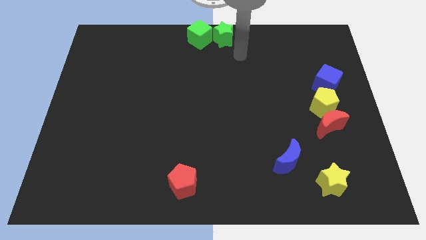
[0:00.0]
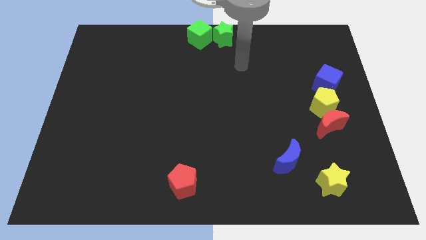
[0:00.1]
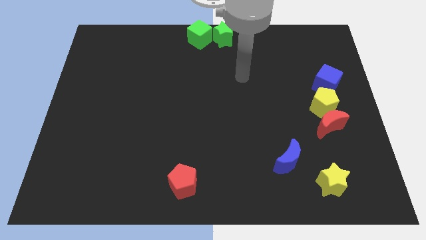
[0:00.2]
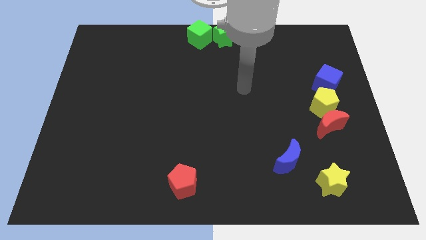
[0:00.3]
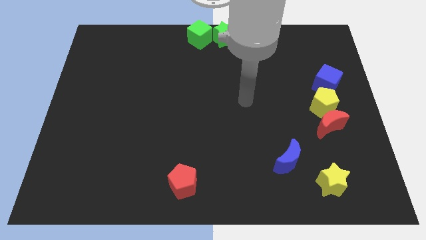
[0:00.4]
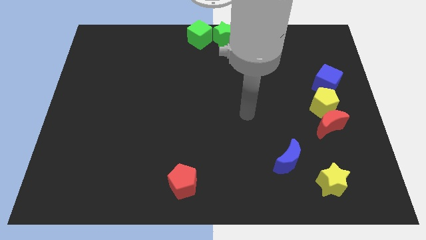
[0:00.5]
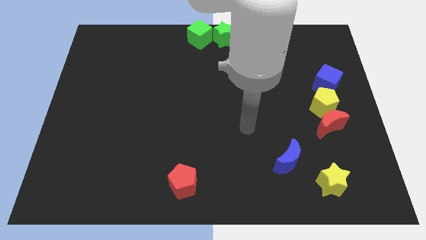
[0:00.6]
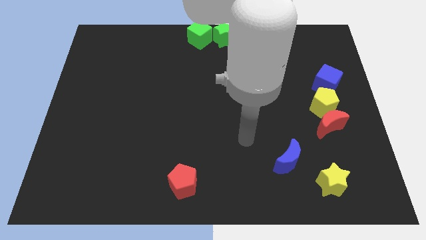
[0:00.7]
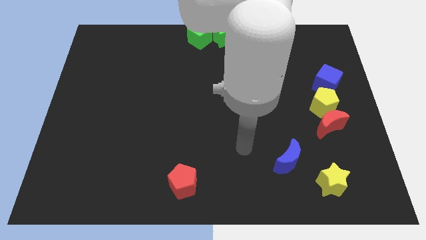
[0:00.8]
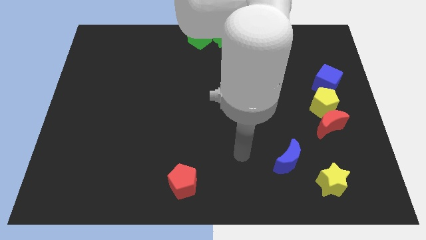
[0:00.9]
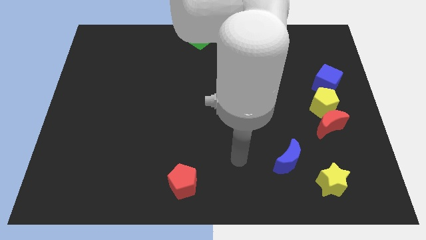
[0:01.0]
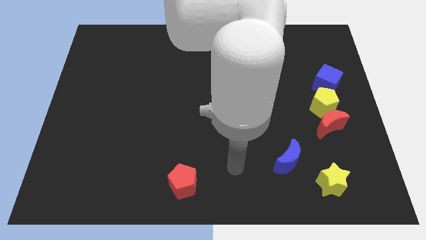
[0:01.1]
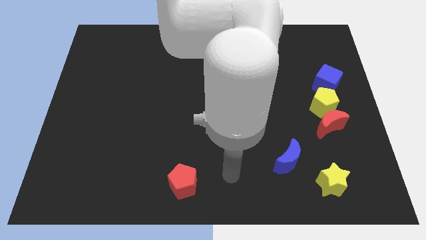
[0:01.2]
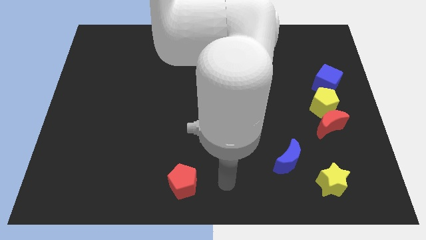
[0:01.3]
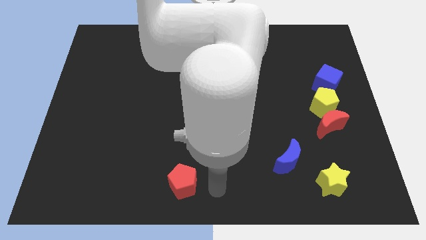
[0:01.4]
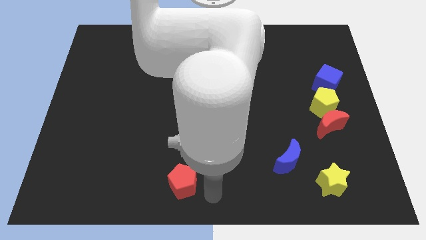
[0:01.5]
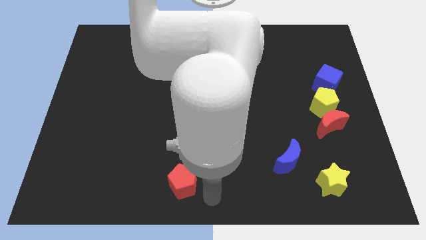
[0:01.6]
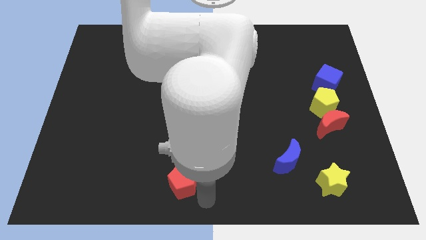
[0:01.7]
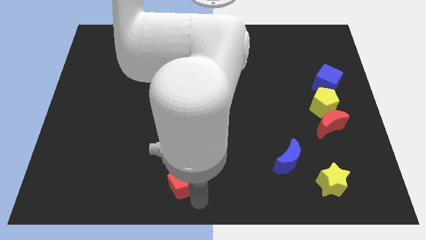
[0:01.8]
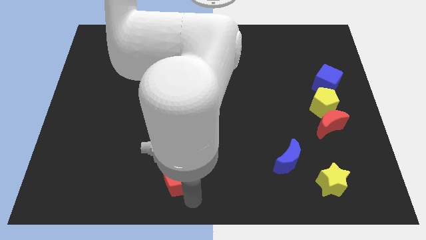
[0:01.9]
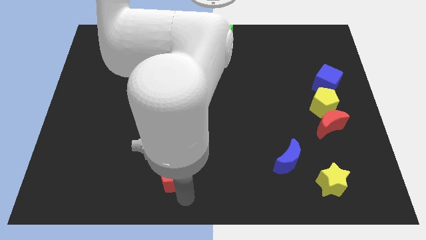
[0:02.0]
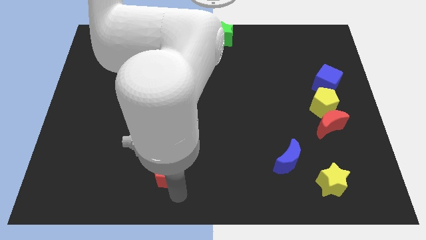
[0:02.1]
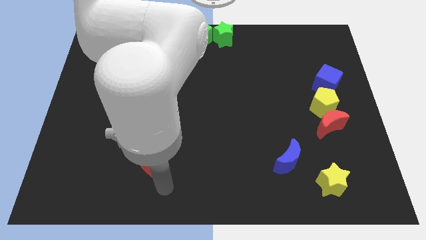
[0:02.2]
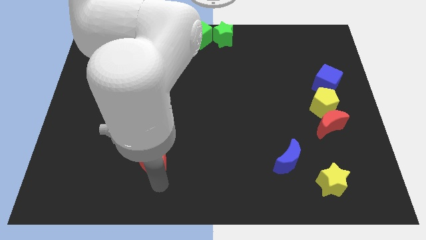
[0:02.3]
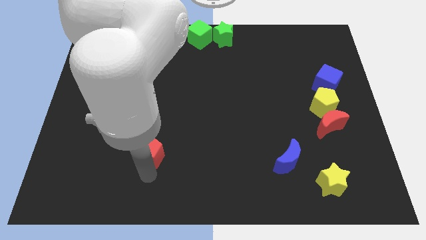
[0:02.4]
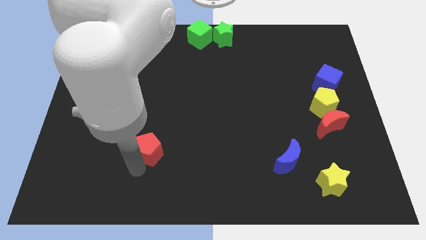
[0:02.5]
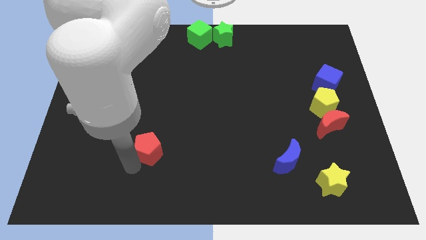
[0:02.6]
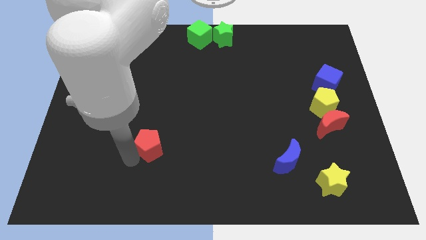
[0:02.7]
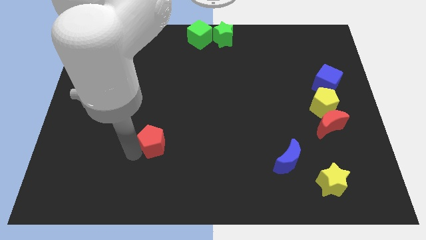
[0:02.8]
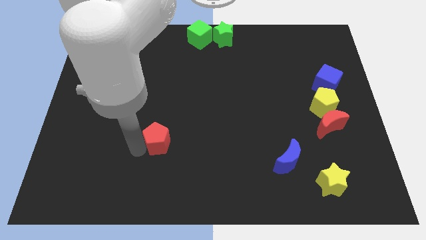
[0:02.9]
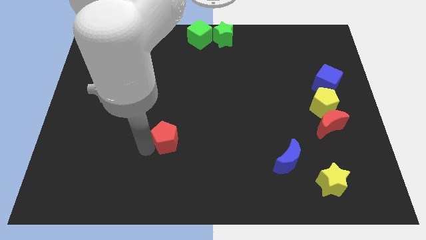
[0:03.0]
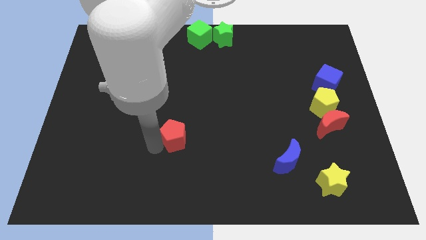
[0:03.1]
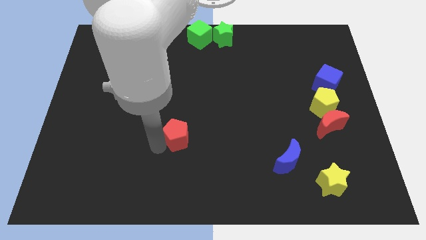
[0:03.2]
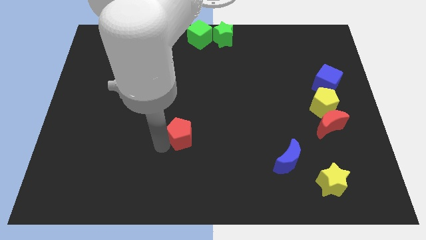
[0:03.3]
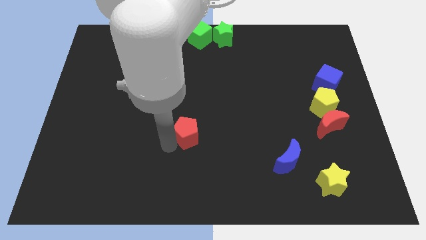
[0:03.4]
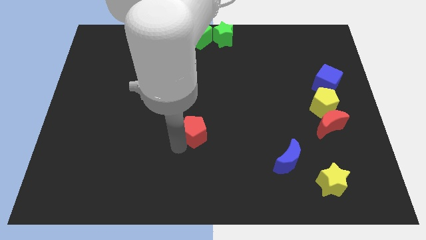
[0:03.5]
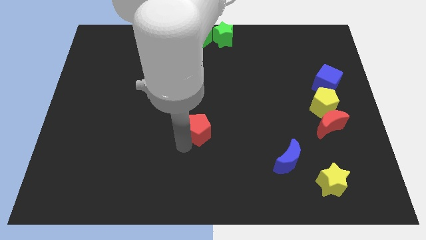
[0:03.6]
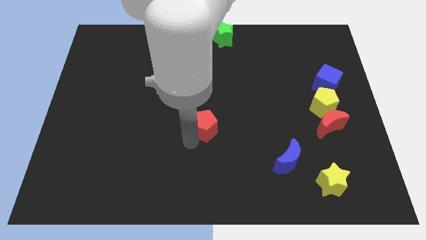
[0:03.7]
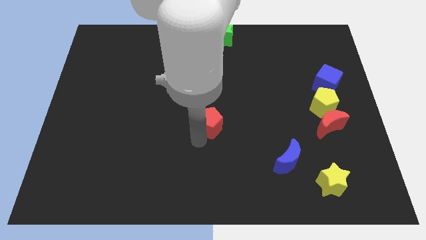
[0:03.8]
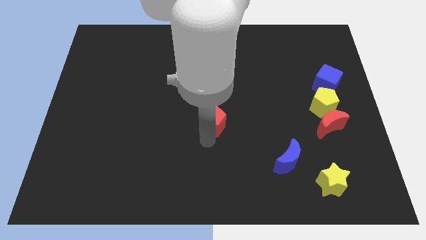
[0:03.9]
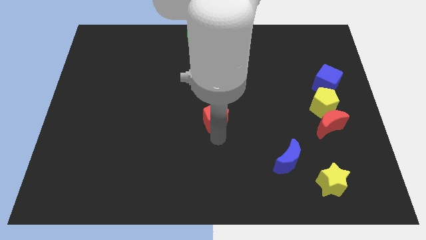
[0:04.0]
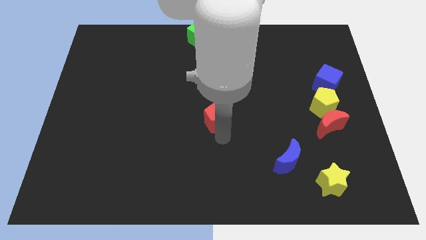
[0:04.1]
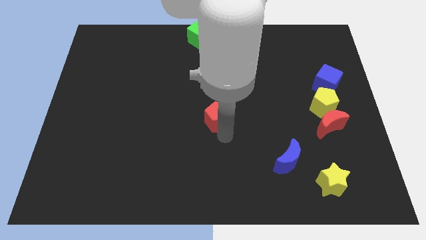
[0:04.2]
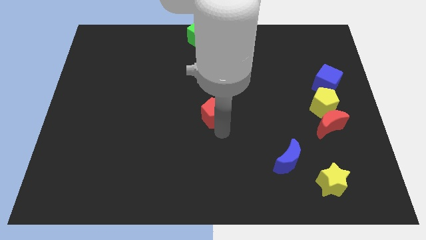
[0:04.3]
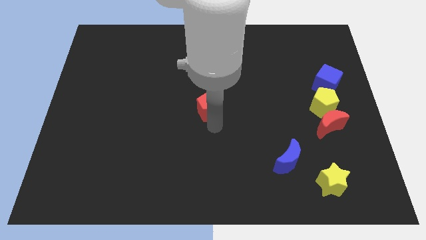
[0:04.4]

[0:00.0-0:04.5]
move the red pentagon to the center of the board

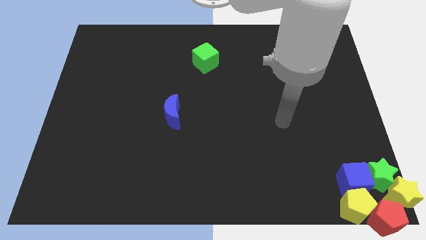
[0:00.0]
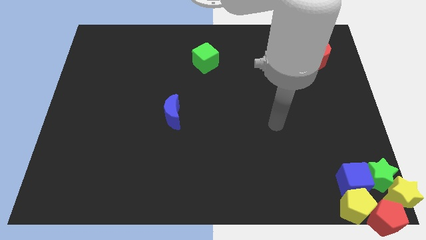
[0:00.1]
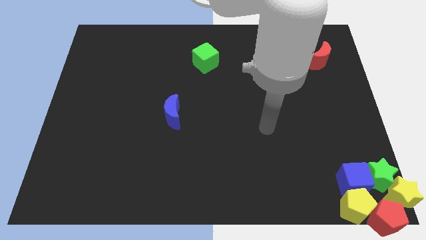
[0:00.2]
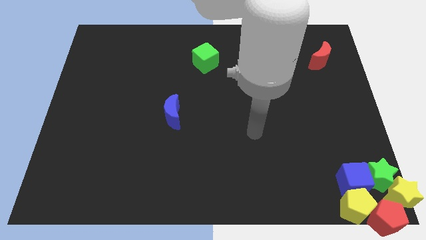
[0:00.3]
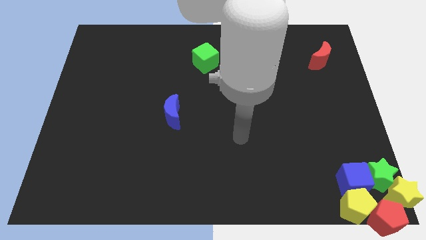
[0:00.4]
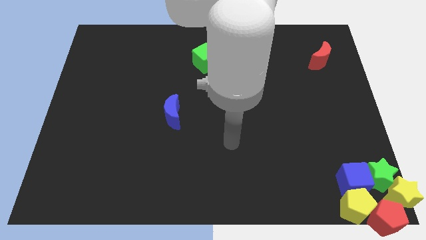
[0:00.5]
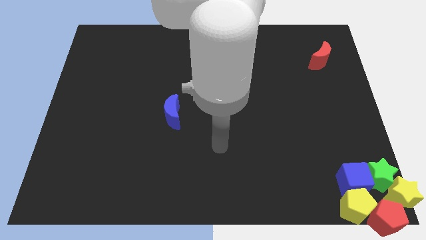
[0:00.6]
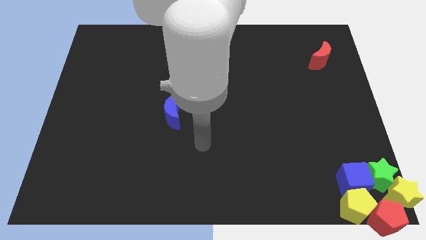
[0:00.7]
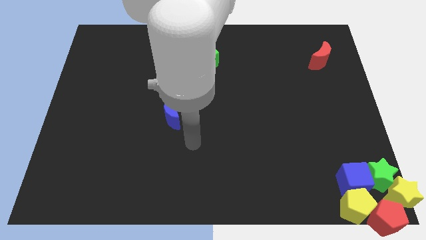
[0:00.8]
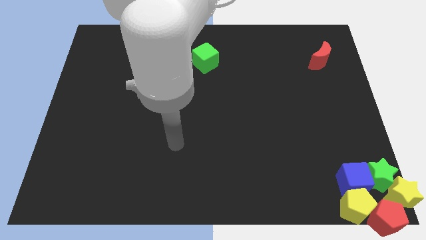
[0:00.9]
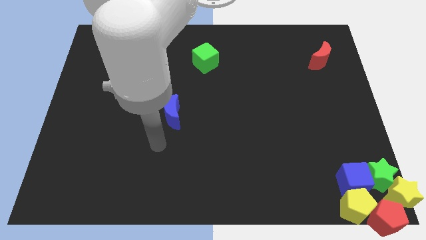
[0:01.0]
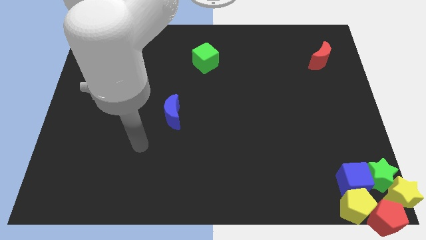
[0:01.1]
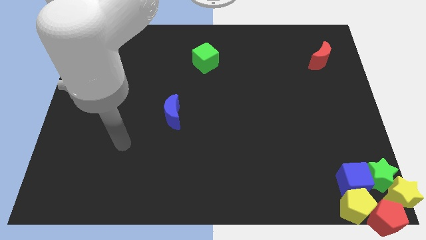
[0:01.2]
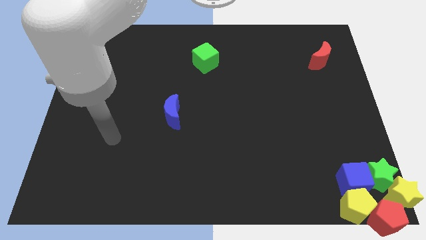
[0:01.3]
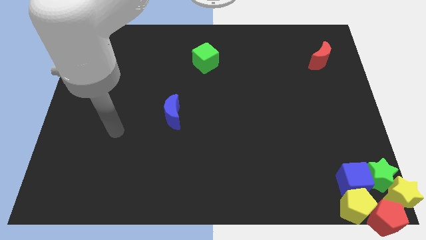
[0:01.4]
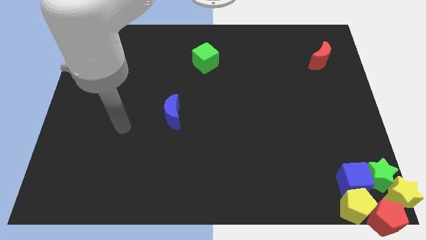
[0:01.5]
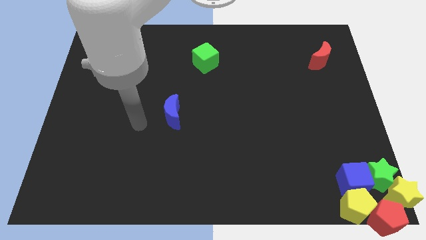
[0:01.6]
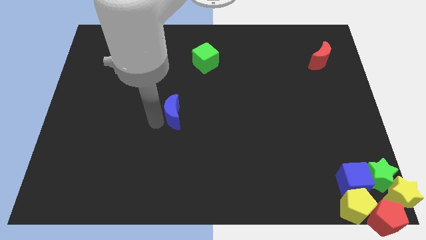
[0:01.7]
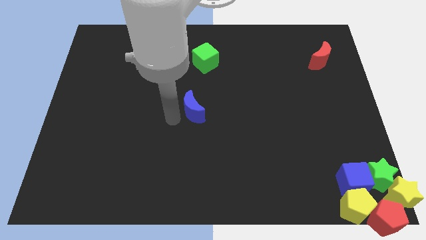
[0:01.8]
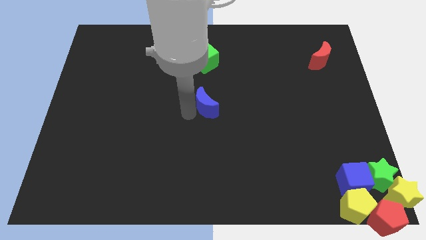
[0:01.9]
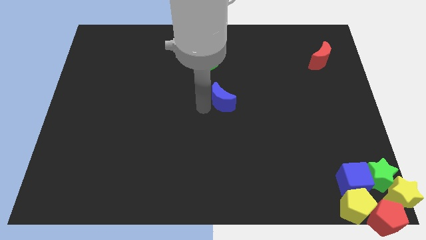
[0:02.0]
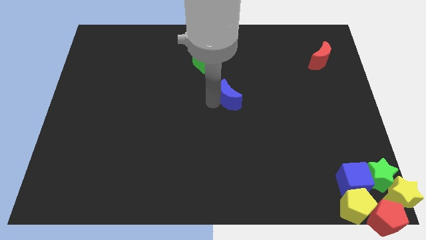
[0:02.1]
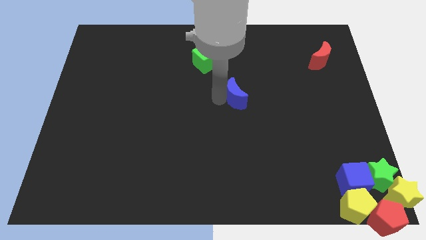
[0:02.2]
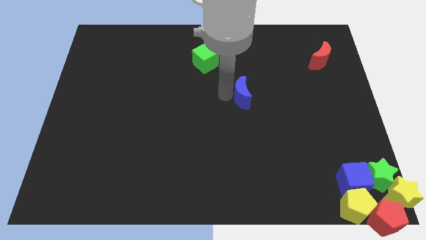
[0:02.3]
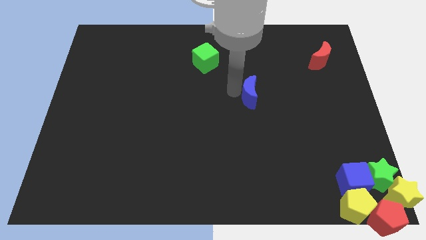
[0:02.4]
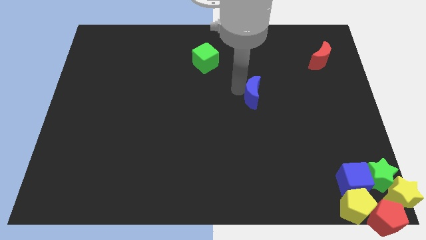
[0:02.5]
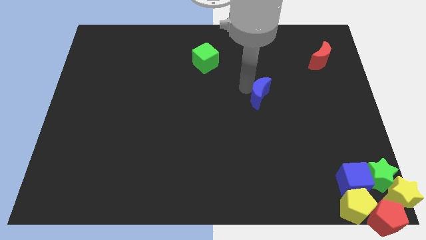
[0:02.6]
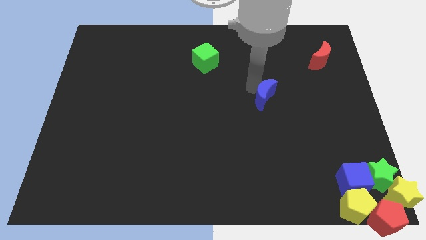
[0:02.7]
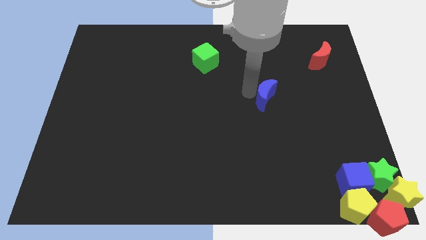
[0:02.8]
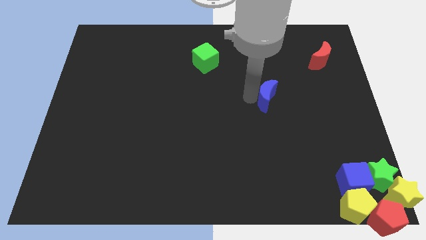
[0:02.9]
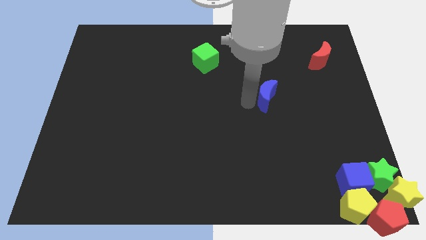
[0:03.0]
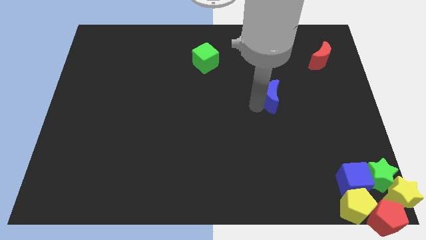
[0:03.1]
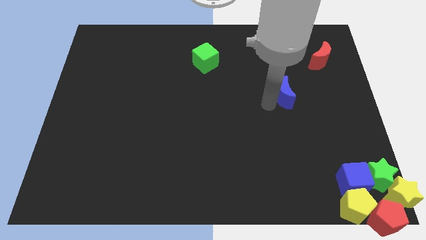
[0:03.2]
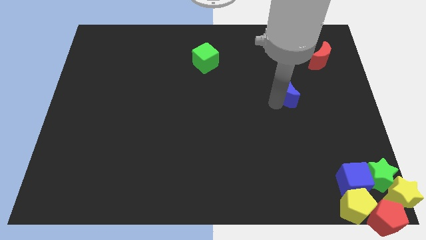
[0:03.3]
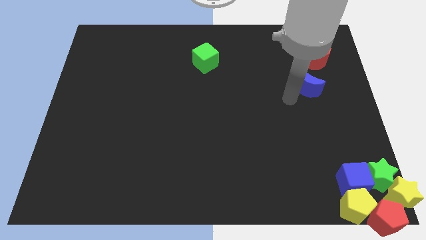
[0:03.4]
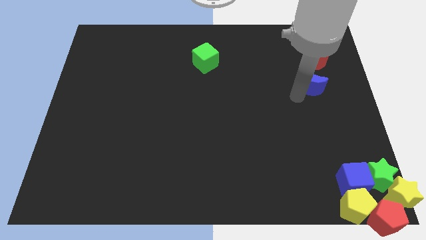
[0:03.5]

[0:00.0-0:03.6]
push the blue moon towards the right side of the board

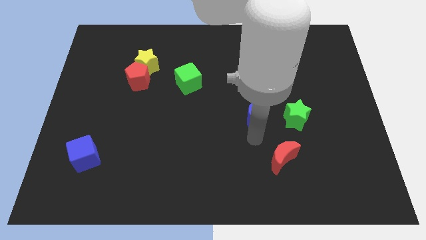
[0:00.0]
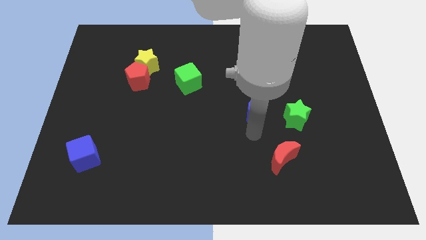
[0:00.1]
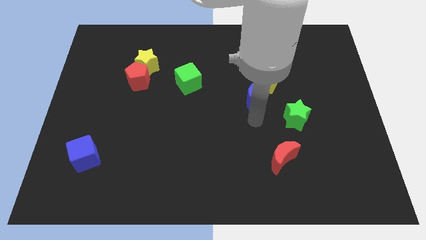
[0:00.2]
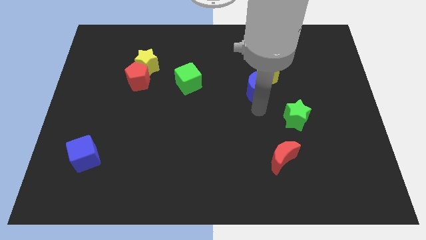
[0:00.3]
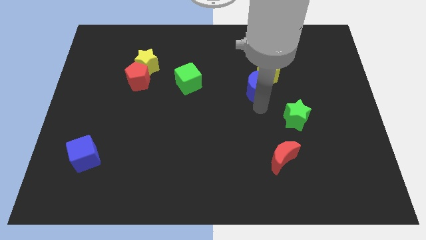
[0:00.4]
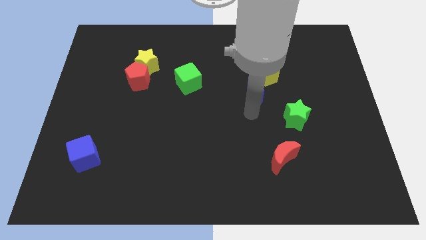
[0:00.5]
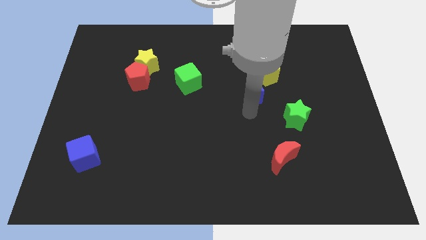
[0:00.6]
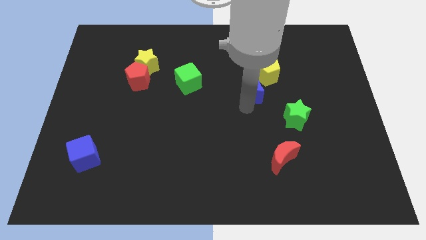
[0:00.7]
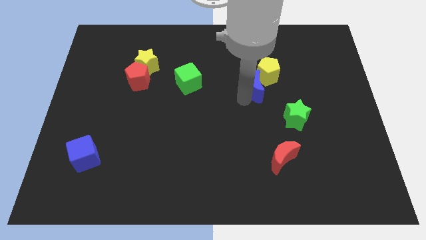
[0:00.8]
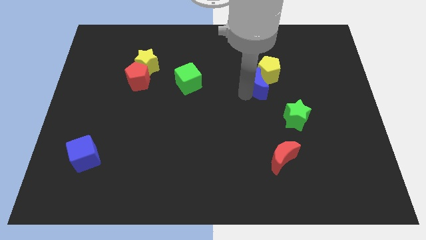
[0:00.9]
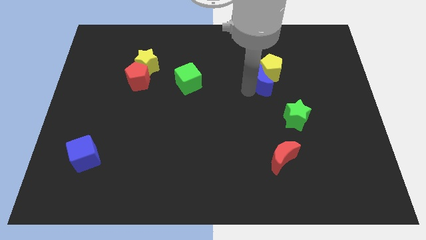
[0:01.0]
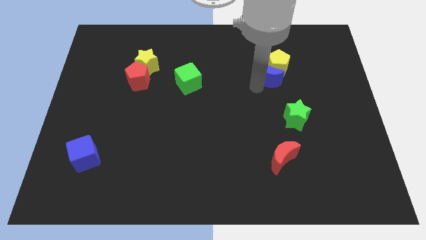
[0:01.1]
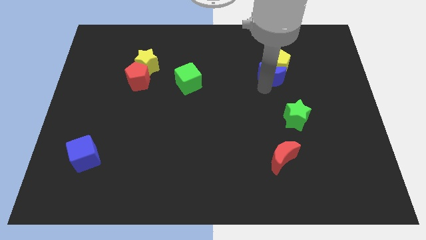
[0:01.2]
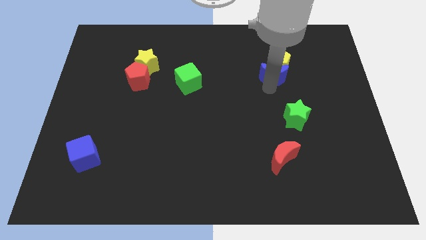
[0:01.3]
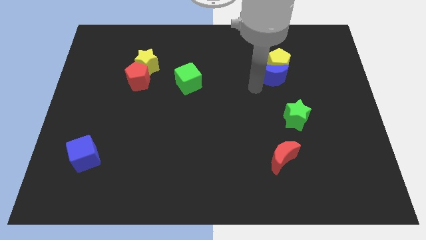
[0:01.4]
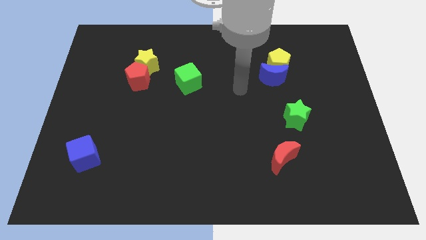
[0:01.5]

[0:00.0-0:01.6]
push the blue crescent into the yellow pentagon
